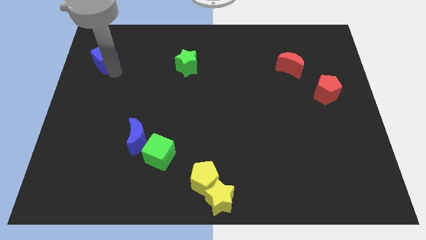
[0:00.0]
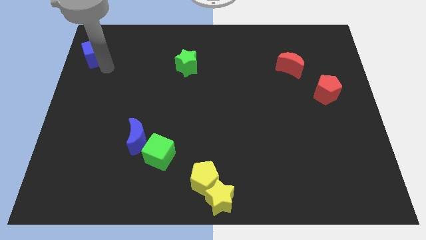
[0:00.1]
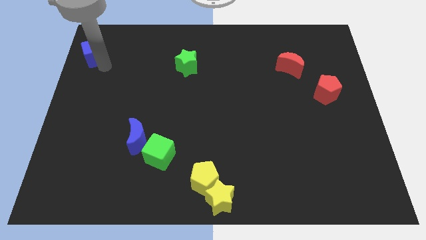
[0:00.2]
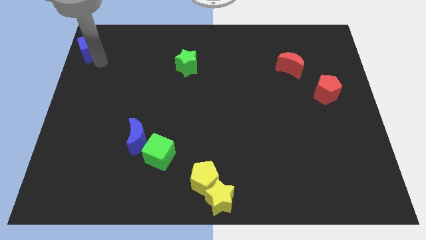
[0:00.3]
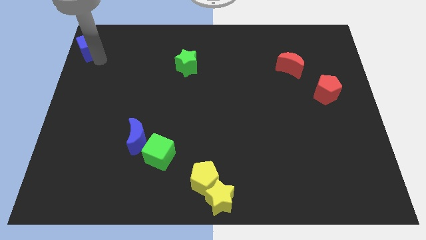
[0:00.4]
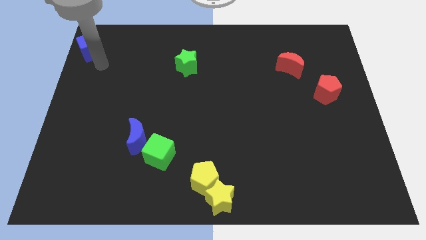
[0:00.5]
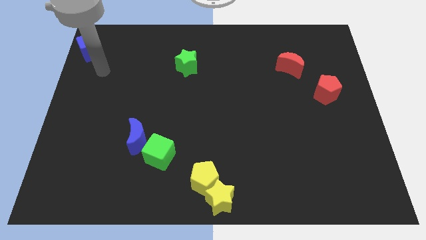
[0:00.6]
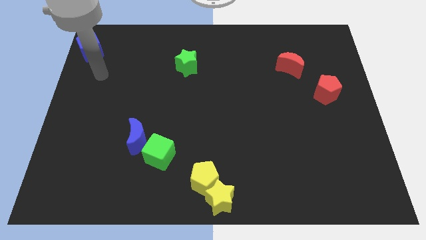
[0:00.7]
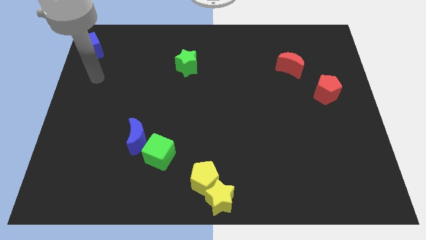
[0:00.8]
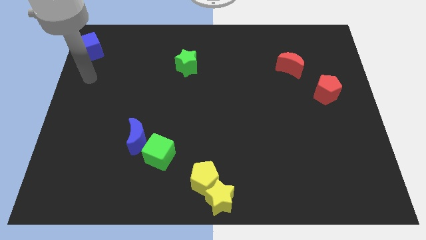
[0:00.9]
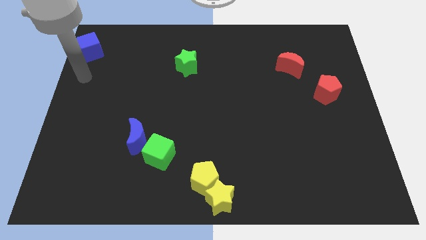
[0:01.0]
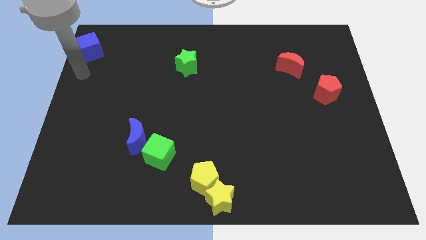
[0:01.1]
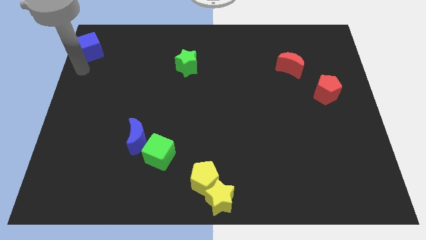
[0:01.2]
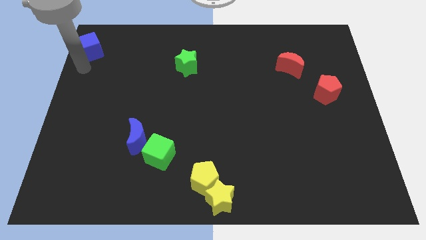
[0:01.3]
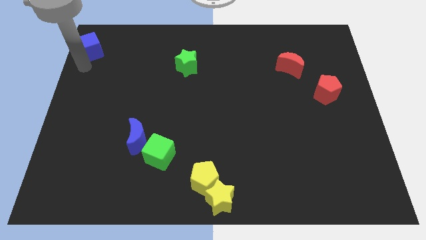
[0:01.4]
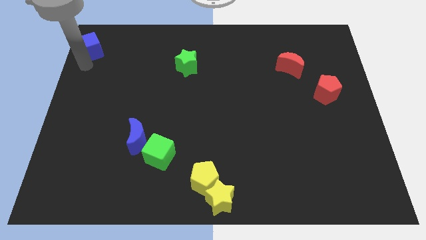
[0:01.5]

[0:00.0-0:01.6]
push the blue cube to the top left corner of the board

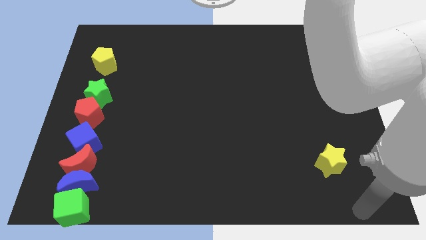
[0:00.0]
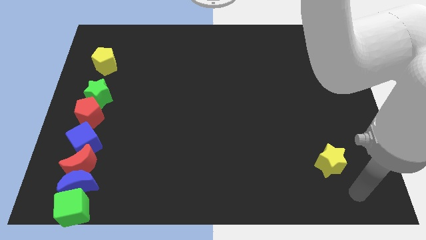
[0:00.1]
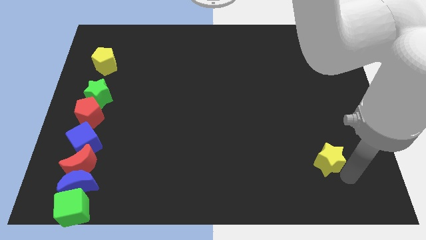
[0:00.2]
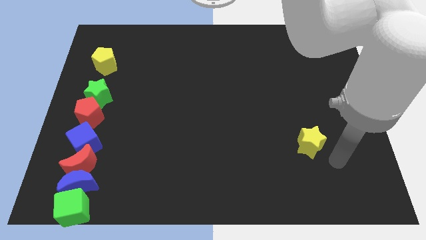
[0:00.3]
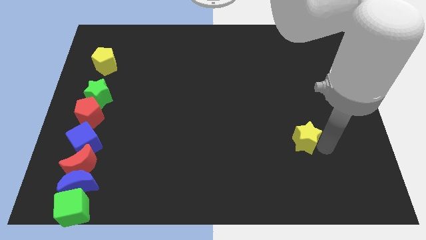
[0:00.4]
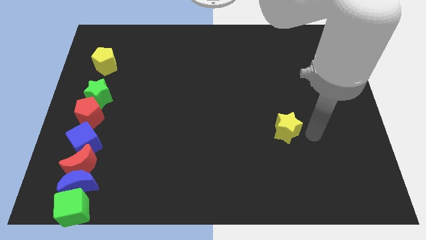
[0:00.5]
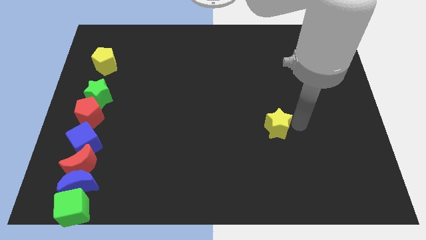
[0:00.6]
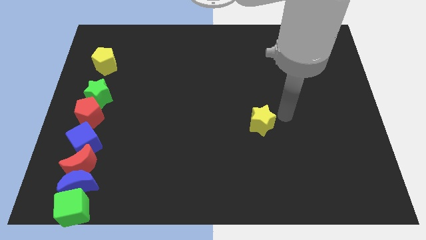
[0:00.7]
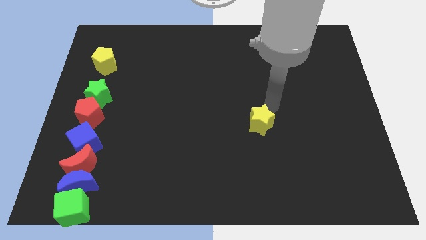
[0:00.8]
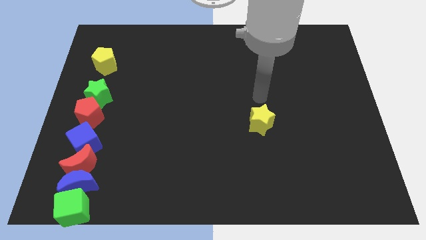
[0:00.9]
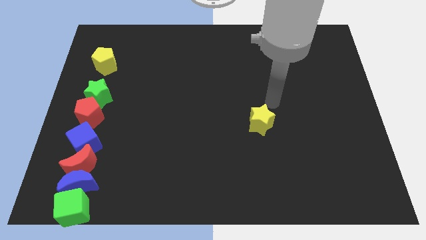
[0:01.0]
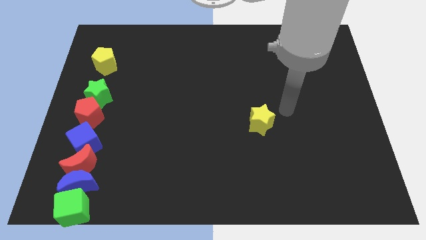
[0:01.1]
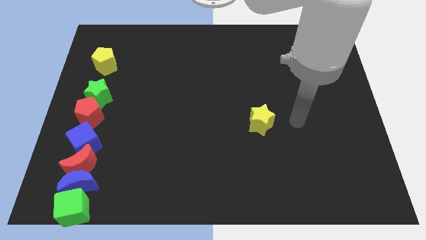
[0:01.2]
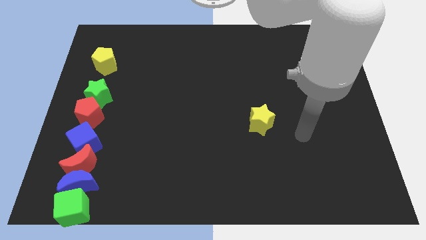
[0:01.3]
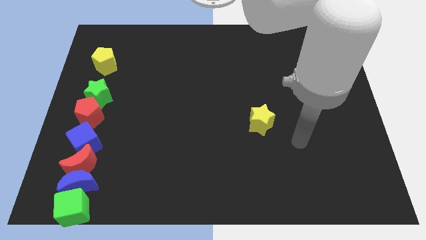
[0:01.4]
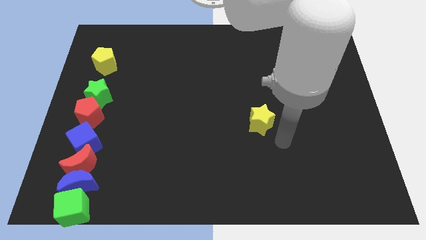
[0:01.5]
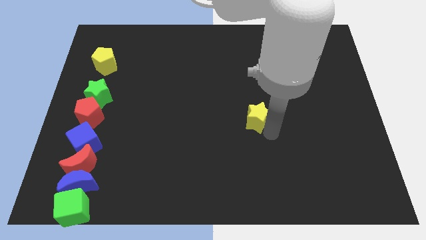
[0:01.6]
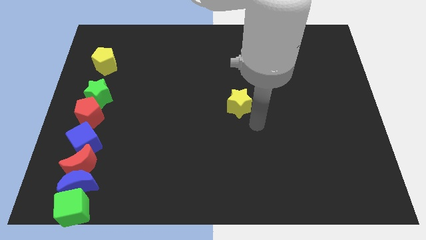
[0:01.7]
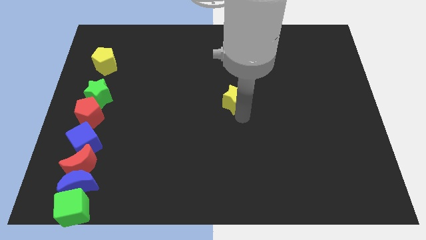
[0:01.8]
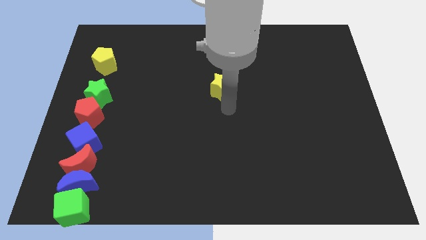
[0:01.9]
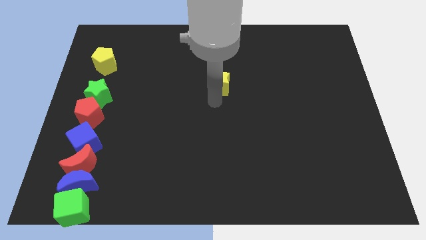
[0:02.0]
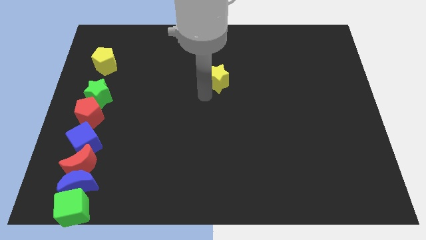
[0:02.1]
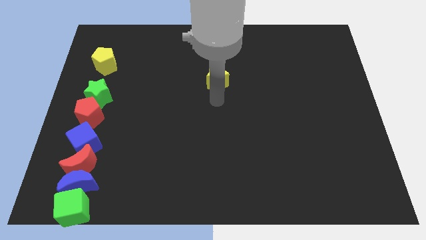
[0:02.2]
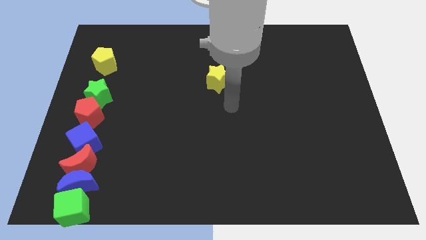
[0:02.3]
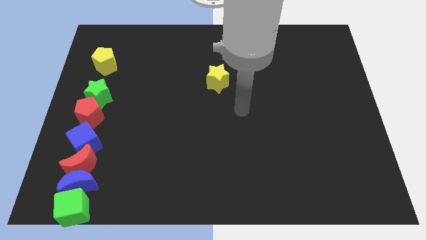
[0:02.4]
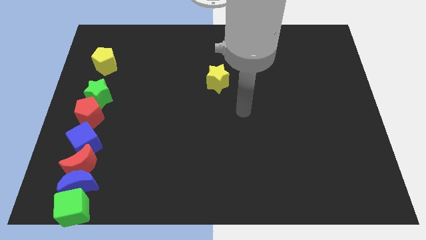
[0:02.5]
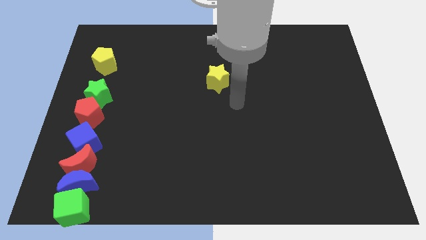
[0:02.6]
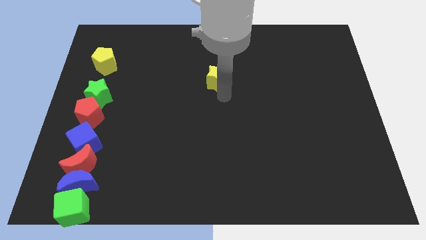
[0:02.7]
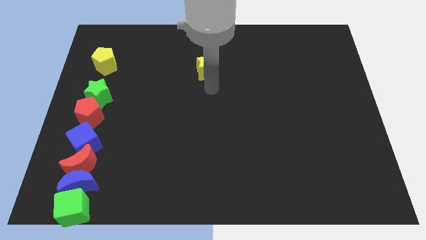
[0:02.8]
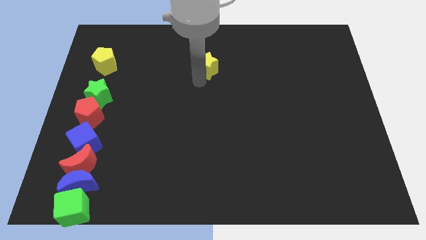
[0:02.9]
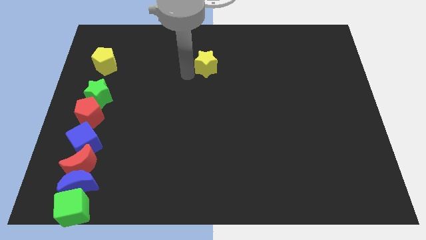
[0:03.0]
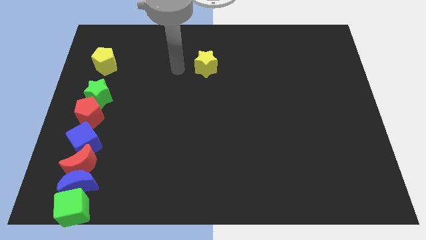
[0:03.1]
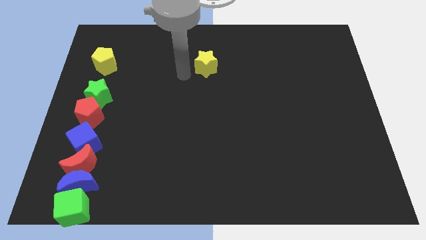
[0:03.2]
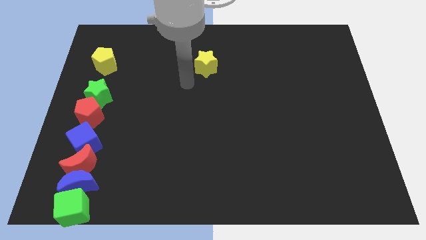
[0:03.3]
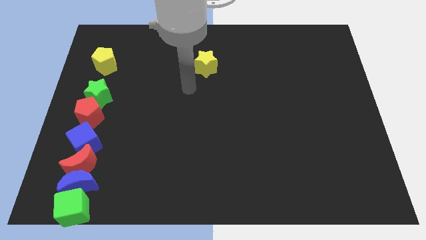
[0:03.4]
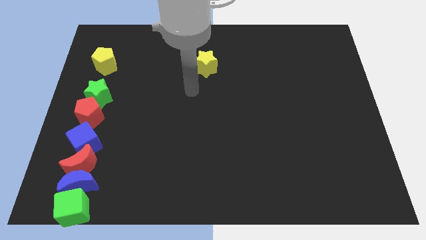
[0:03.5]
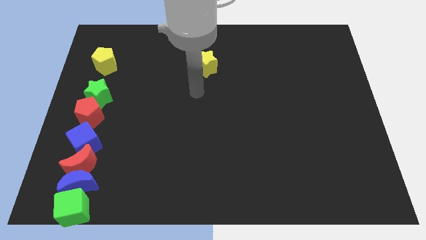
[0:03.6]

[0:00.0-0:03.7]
move the yellow star right to the yellow pentagon

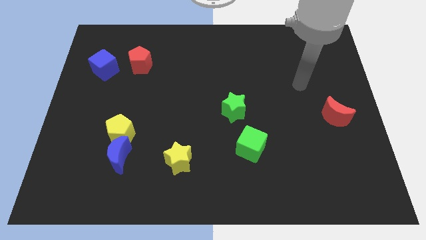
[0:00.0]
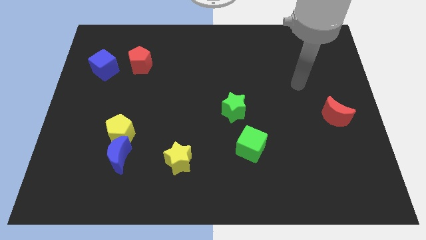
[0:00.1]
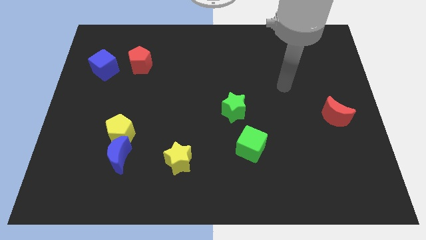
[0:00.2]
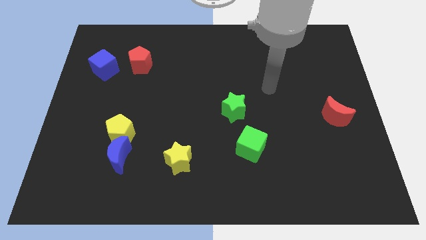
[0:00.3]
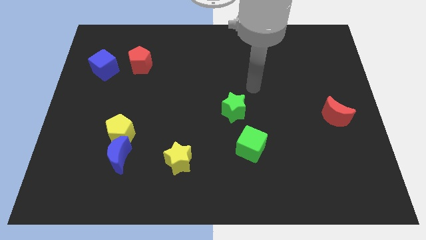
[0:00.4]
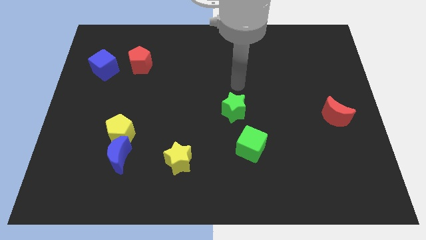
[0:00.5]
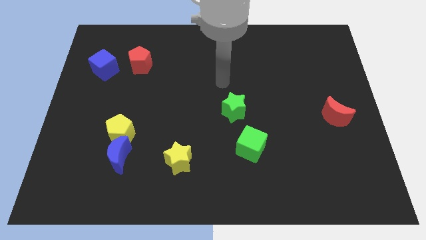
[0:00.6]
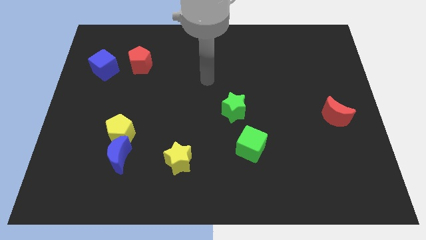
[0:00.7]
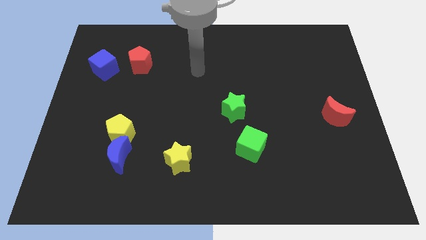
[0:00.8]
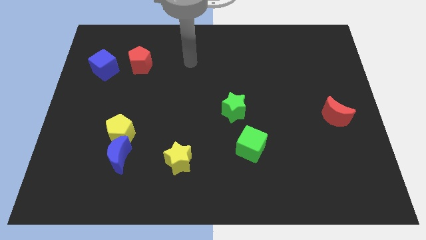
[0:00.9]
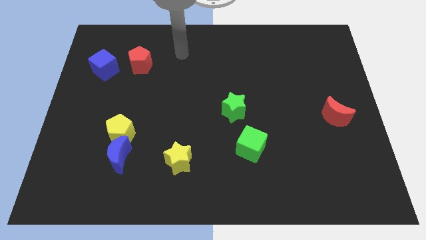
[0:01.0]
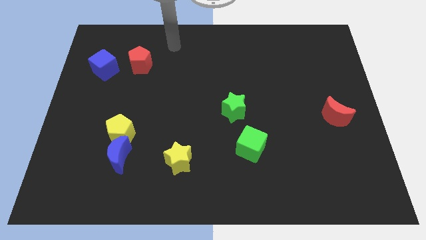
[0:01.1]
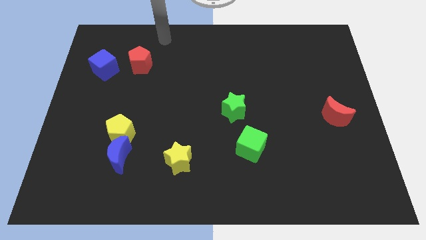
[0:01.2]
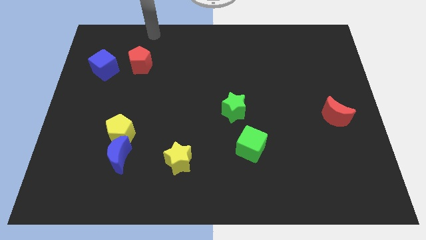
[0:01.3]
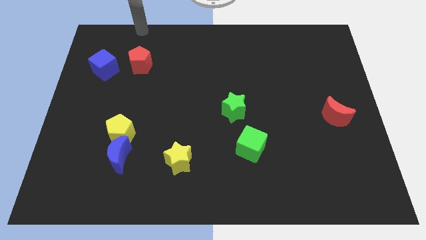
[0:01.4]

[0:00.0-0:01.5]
point your arm at the top of the red pentagon

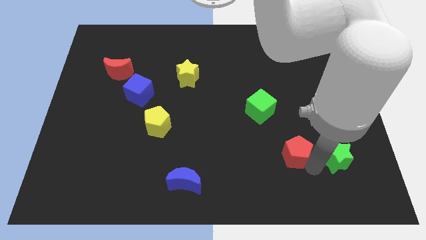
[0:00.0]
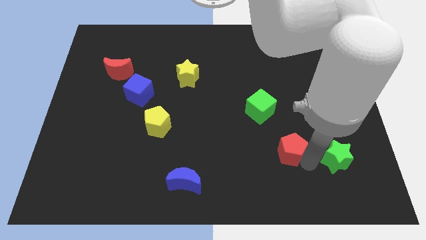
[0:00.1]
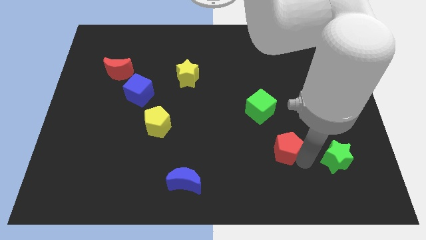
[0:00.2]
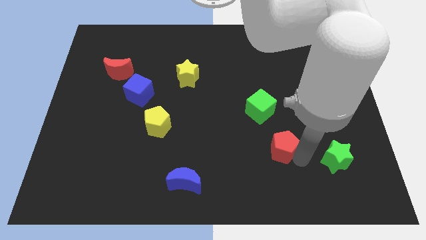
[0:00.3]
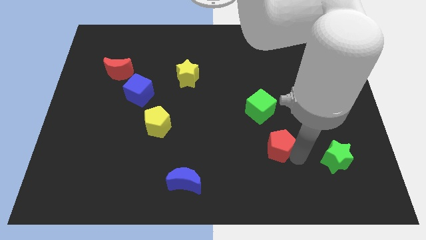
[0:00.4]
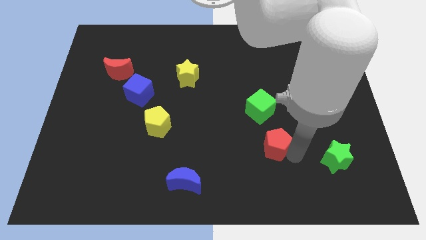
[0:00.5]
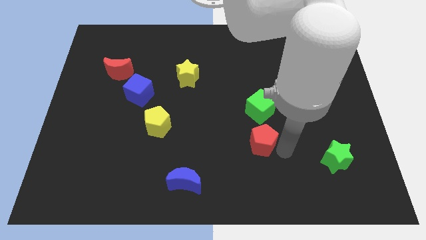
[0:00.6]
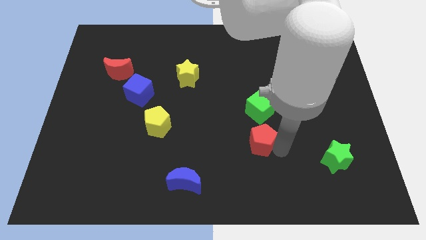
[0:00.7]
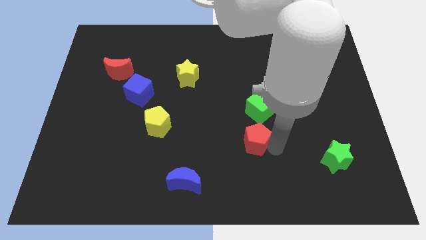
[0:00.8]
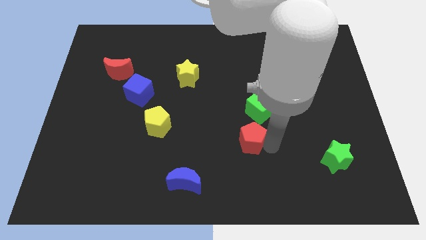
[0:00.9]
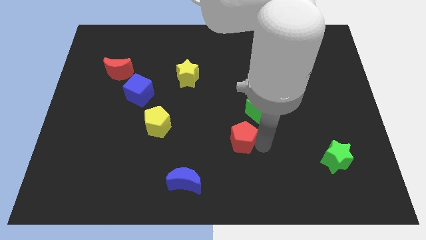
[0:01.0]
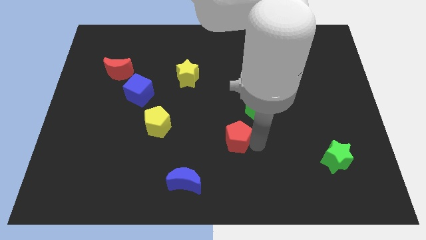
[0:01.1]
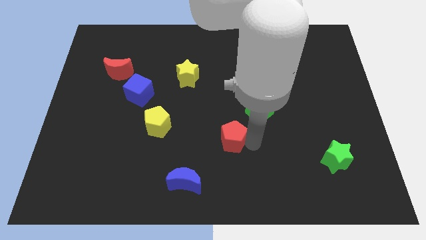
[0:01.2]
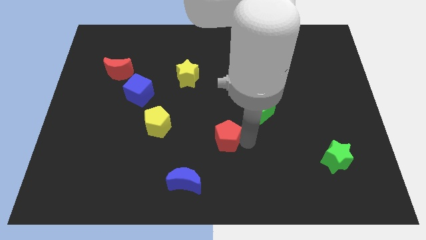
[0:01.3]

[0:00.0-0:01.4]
move red pentagon below green cube

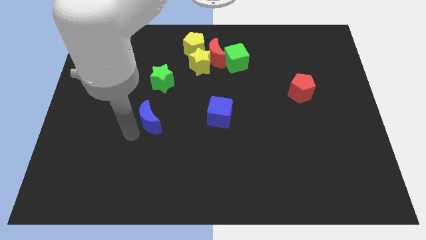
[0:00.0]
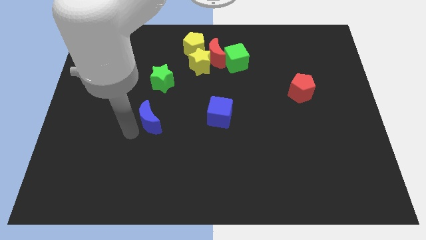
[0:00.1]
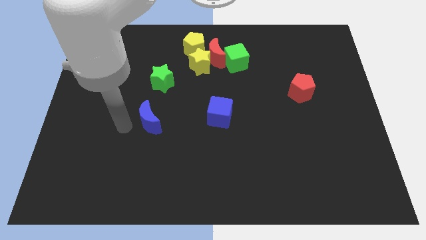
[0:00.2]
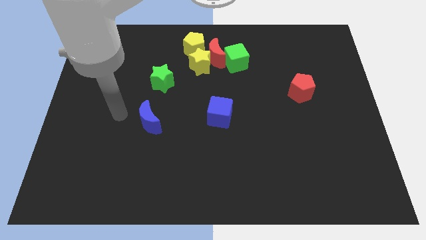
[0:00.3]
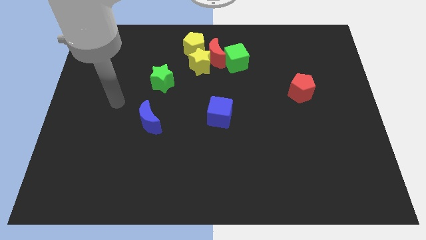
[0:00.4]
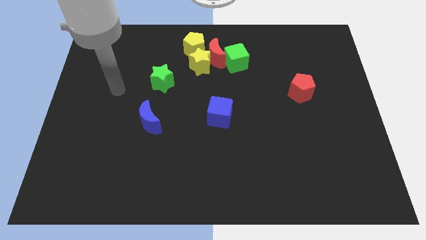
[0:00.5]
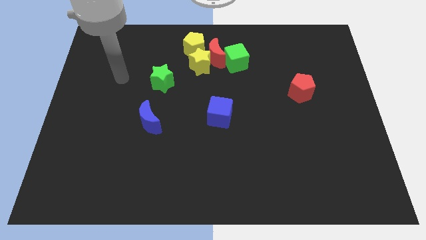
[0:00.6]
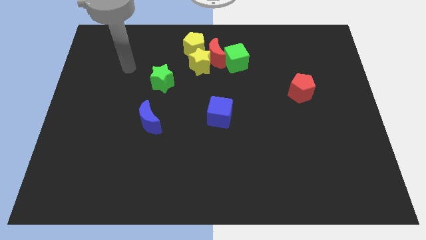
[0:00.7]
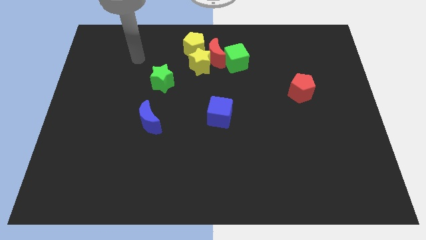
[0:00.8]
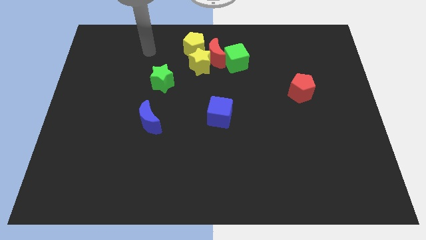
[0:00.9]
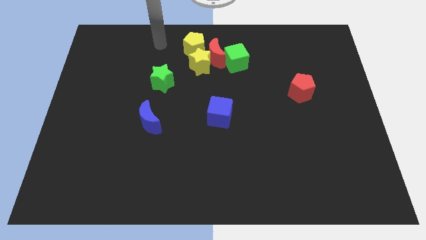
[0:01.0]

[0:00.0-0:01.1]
move your arm away from blue moon
